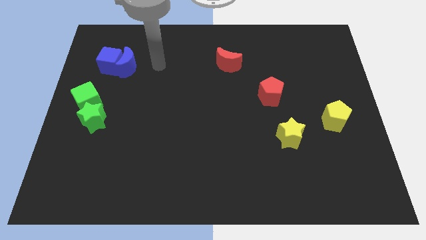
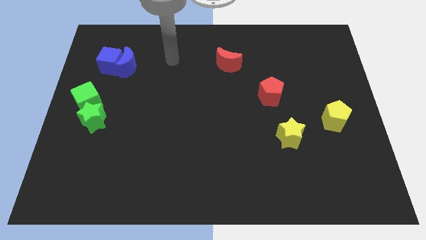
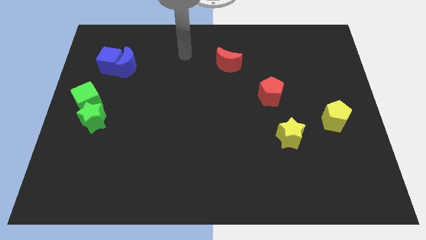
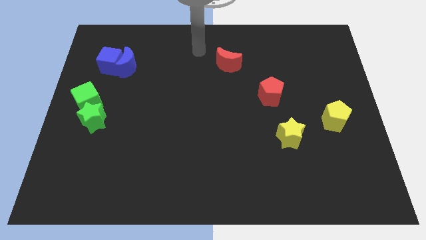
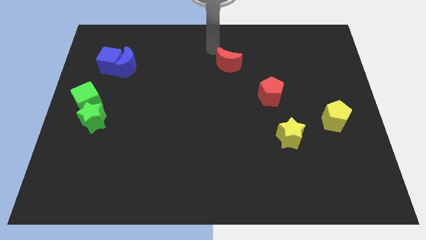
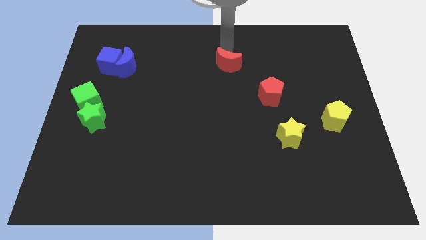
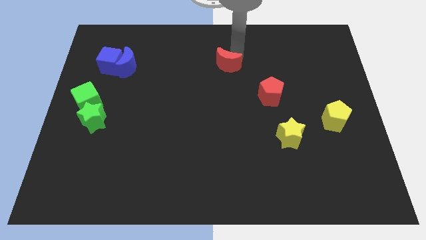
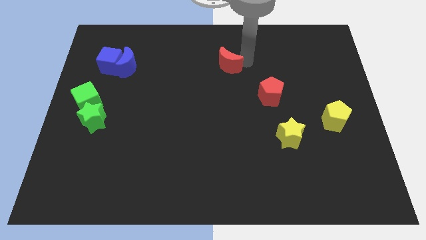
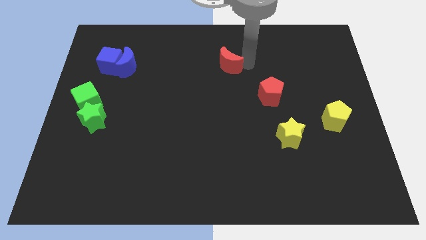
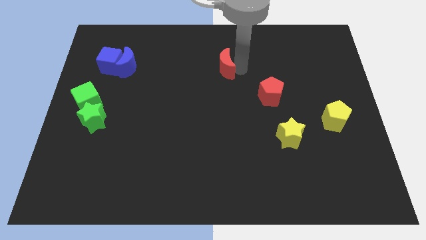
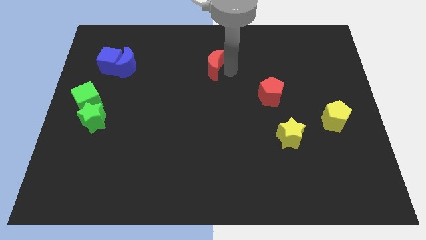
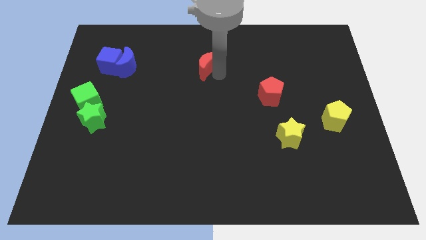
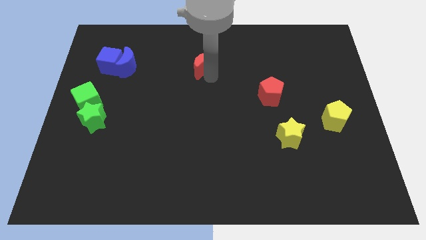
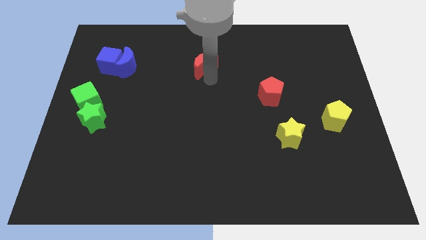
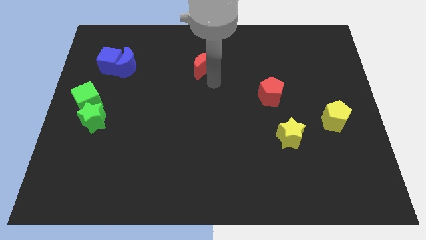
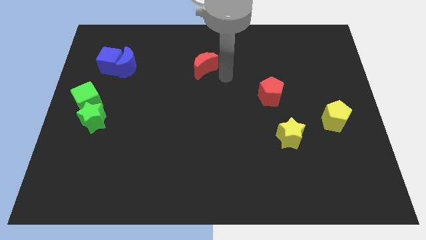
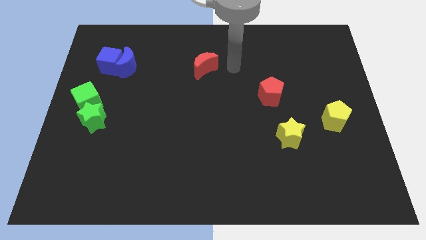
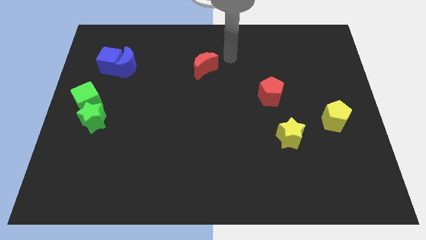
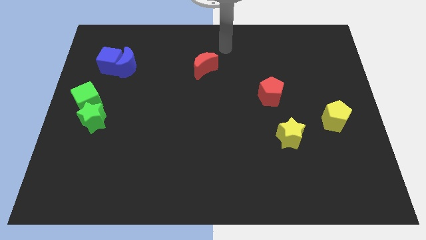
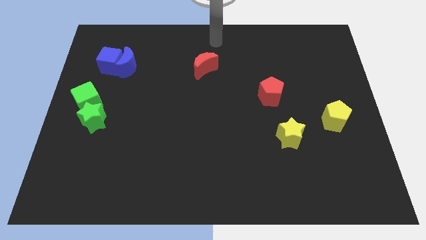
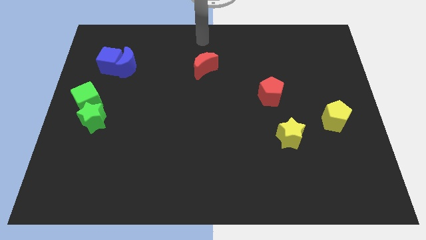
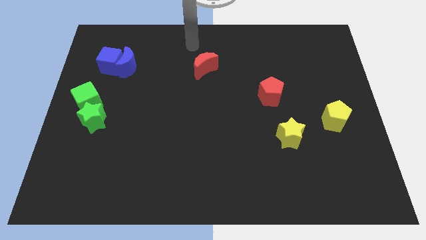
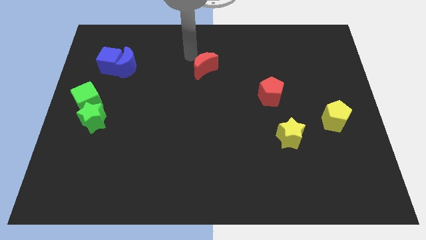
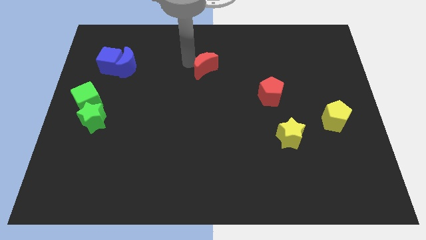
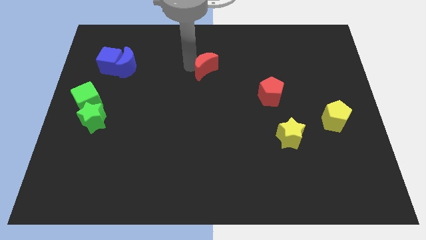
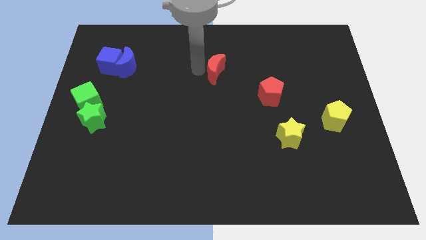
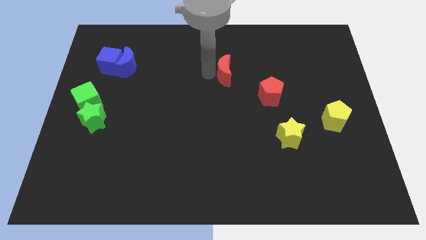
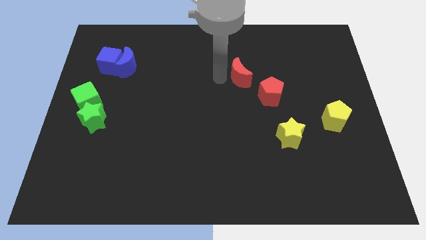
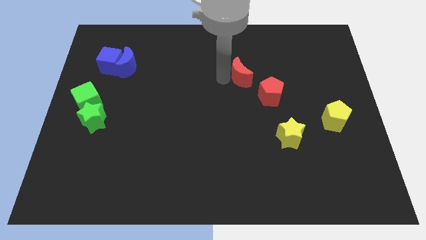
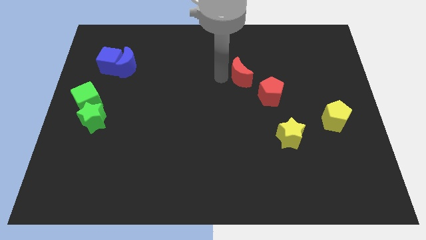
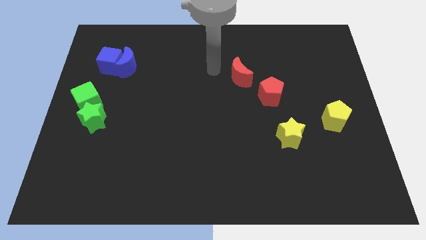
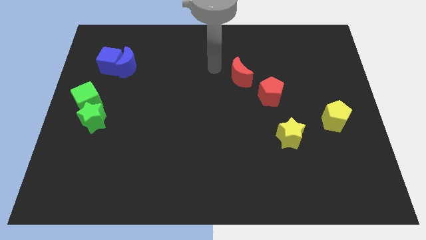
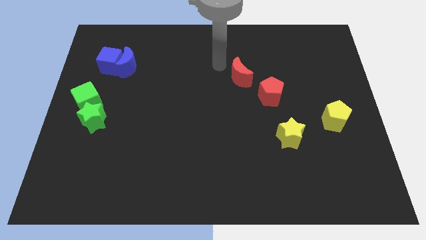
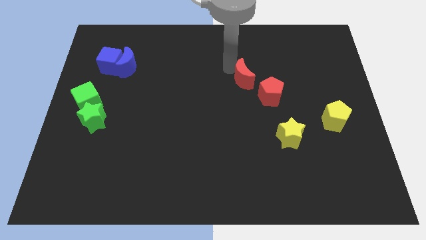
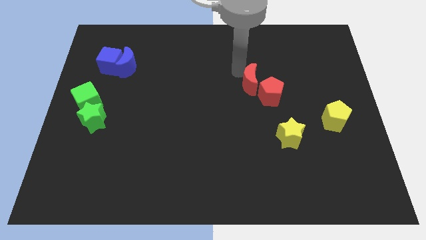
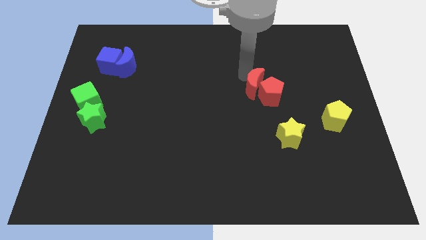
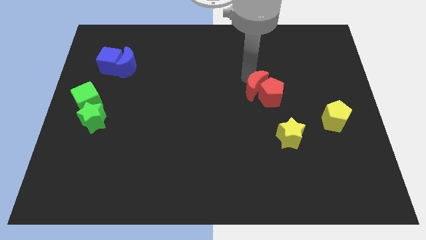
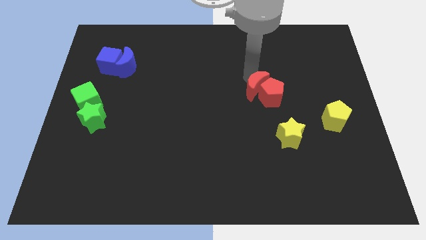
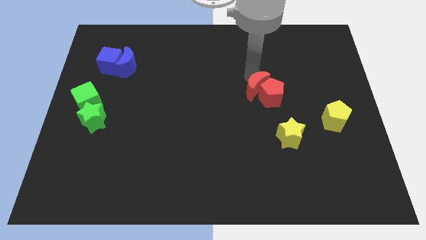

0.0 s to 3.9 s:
move the red crescent to the left of the red pentagon

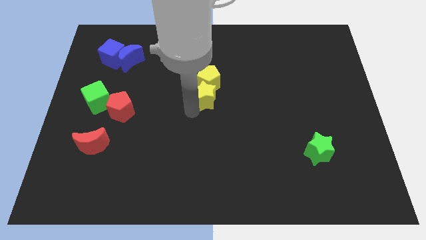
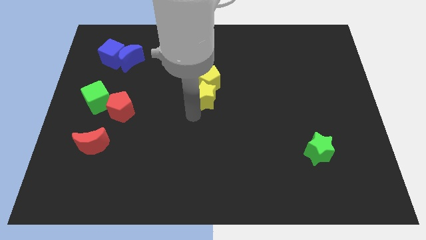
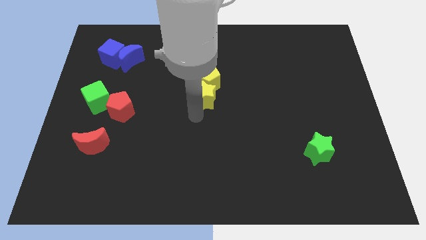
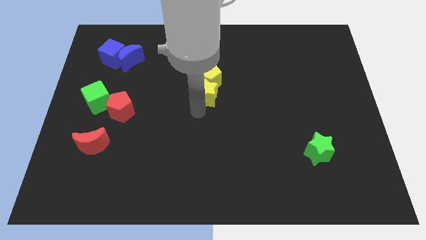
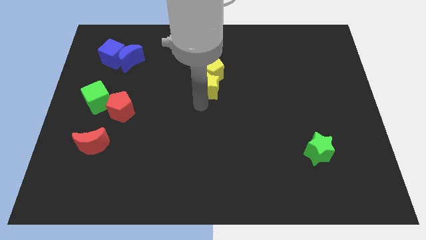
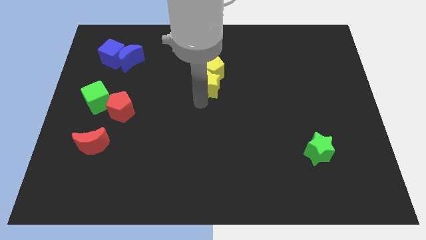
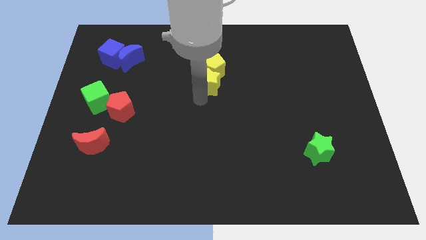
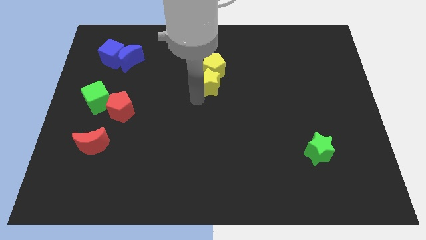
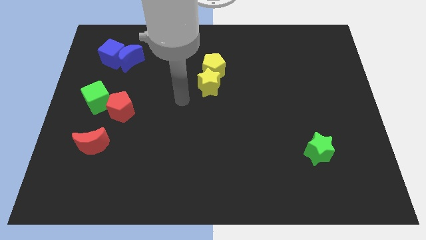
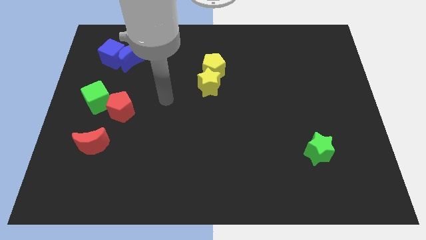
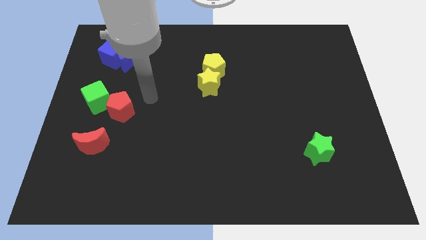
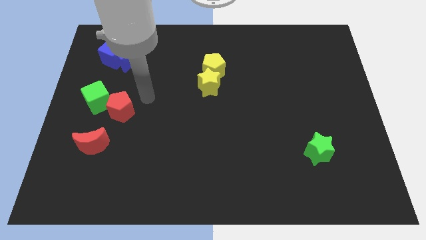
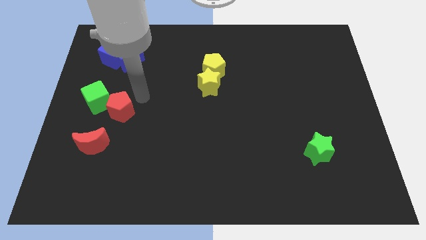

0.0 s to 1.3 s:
push yellow pentagon slightly with yellow star to the top side of the board

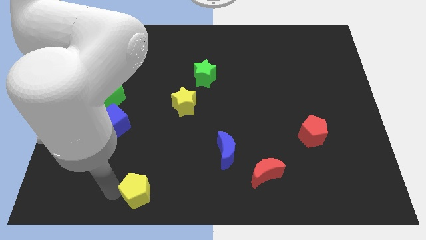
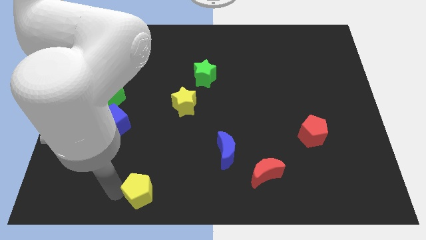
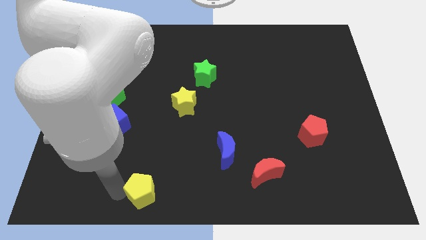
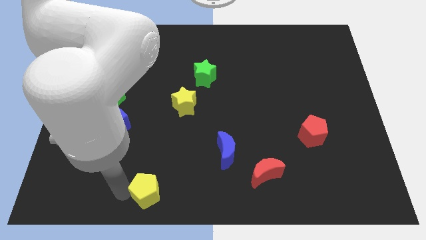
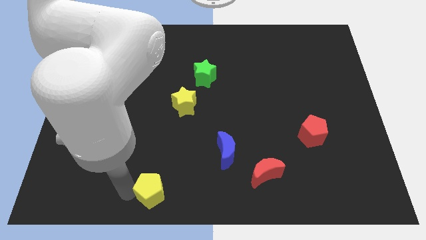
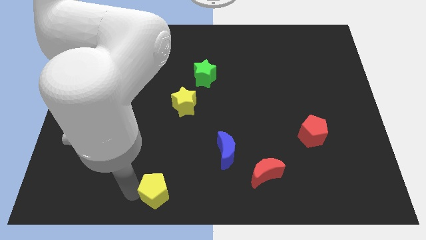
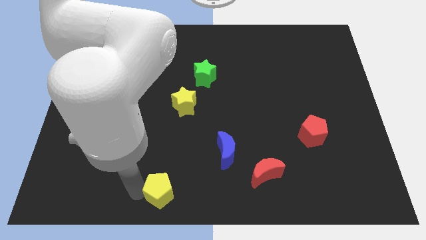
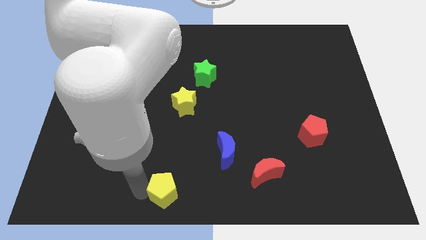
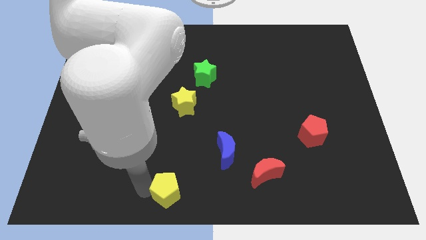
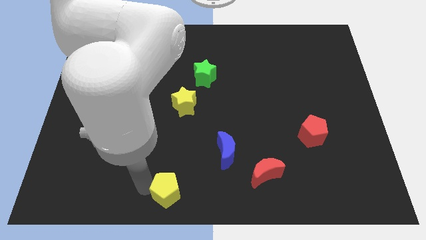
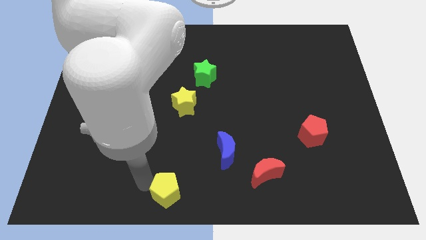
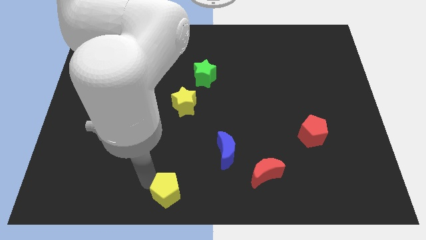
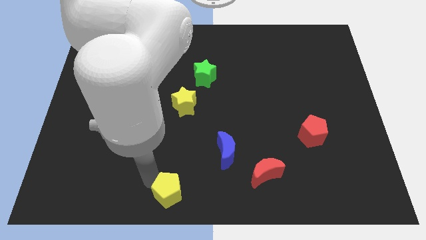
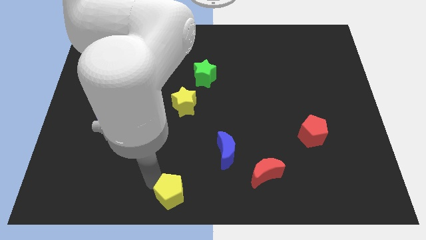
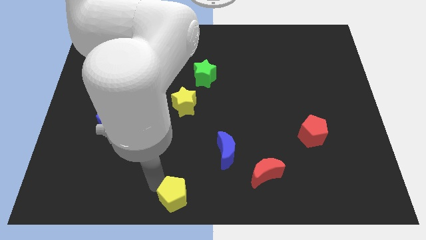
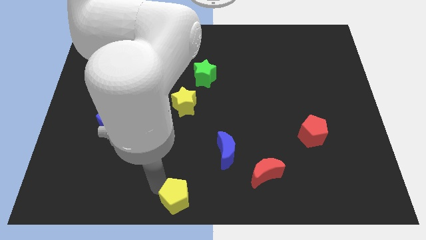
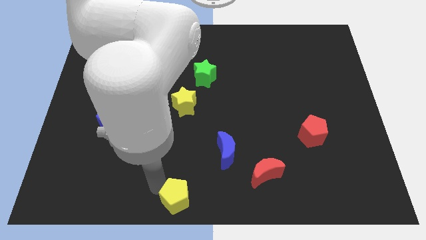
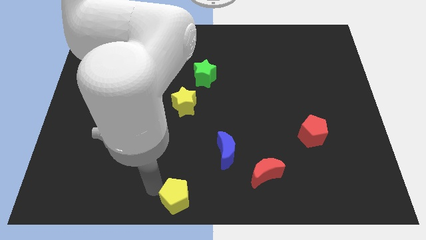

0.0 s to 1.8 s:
move yellow pentagon towards the bottom center of the board

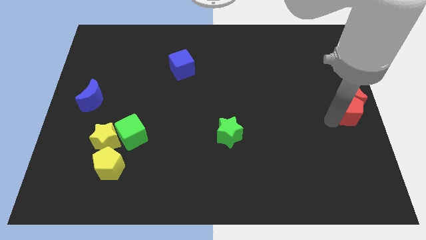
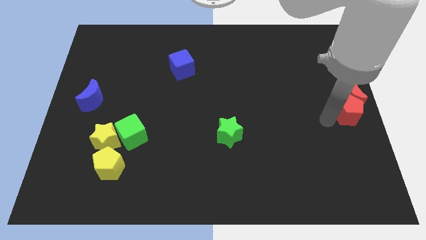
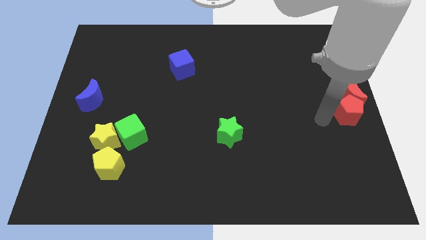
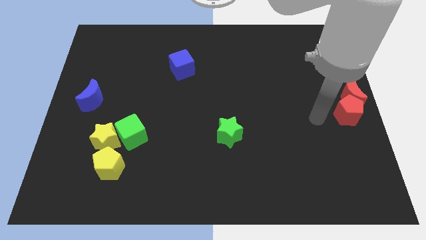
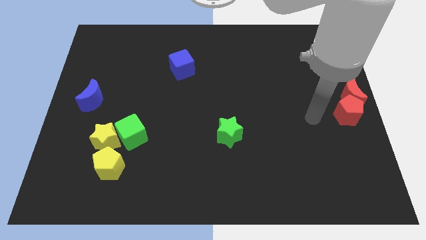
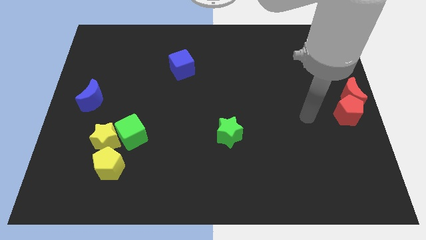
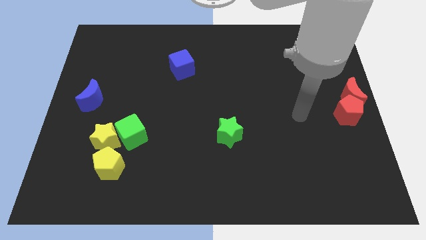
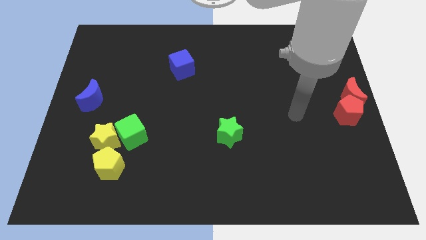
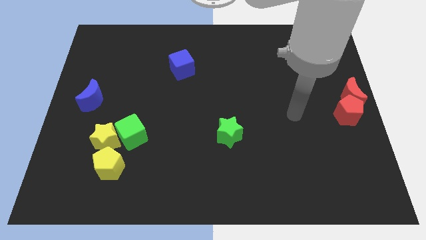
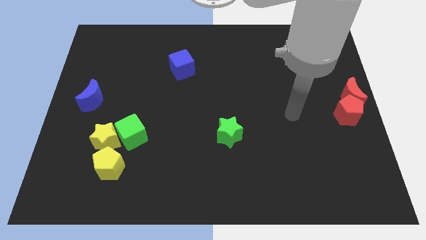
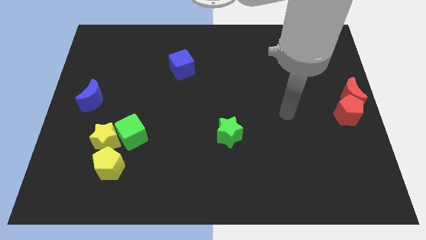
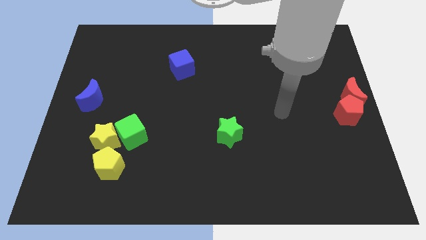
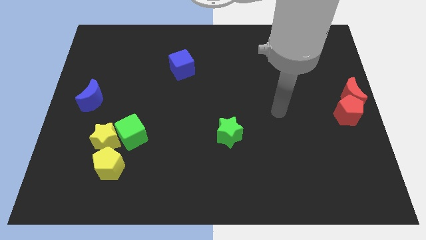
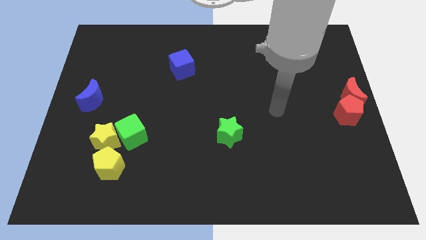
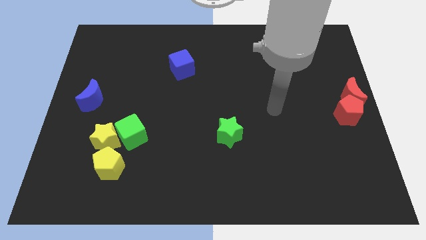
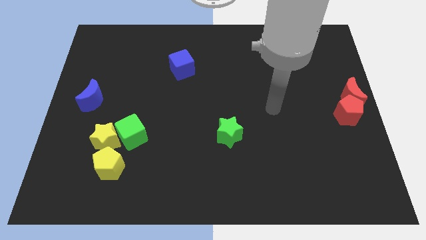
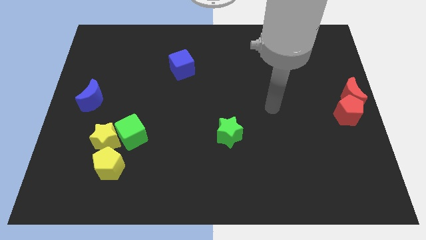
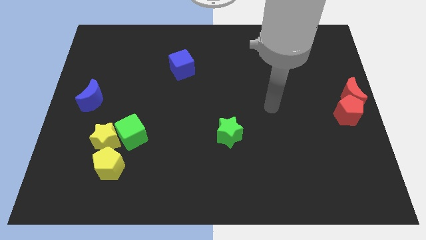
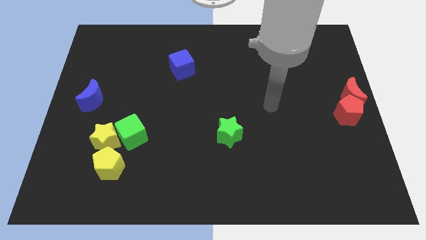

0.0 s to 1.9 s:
move the arm away from the red pentagon

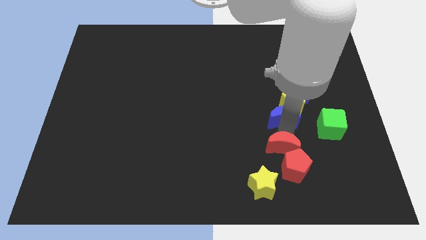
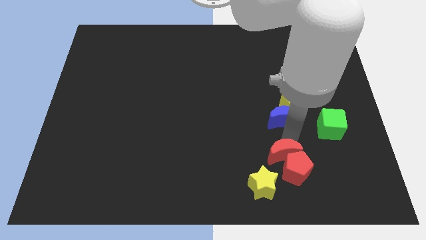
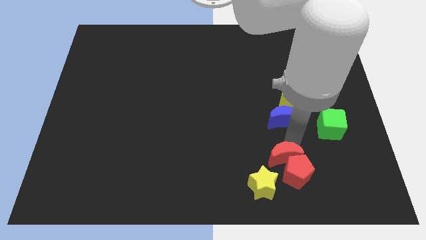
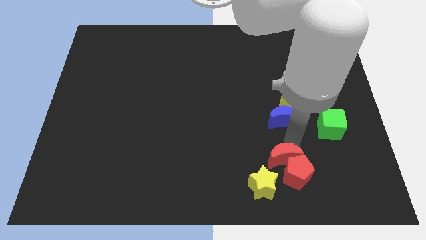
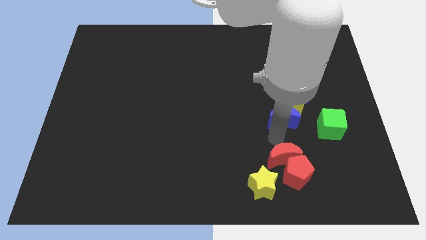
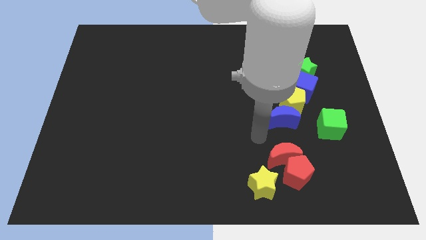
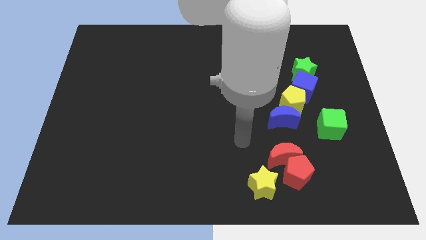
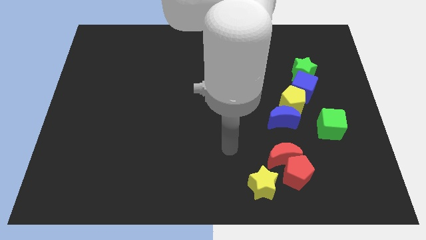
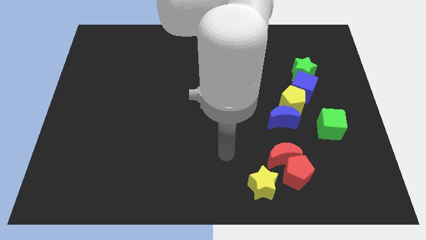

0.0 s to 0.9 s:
push the red moon along with red pentagon towards down
